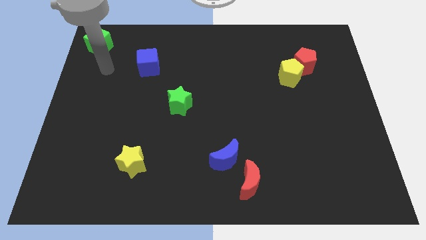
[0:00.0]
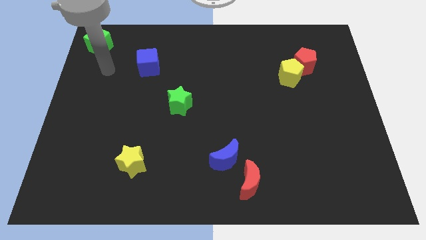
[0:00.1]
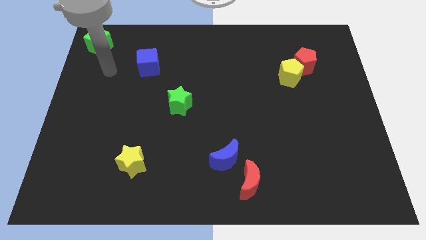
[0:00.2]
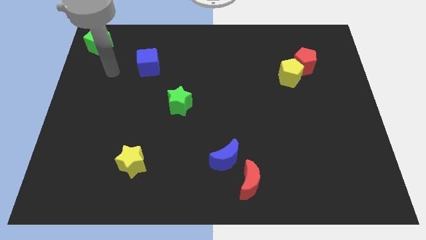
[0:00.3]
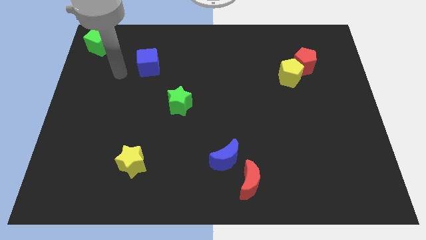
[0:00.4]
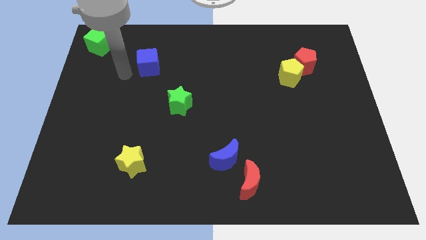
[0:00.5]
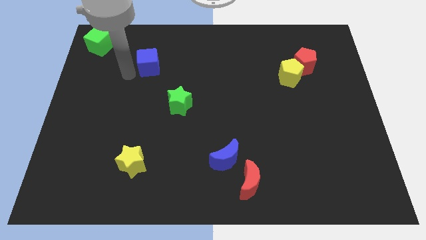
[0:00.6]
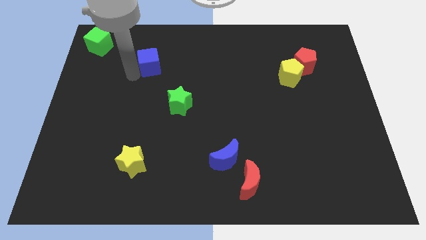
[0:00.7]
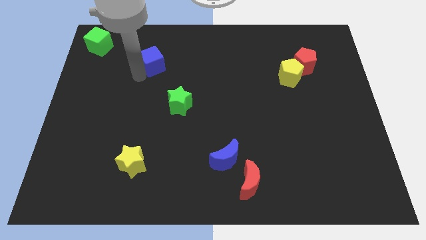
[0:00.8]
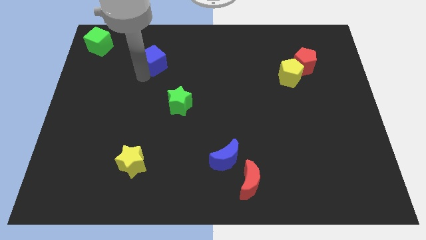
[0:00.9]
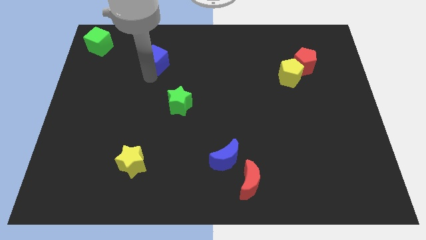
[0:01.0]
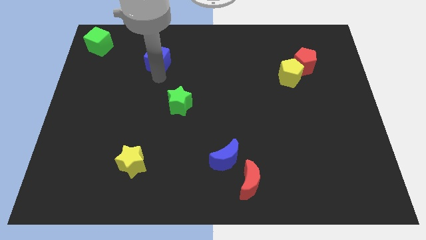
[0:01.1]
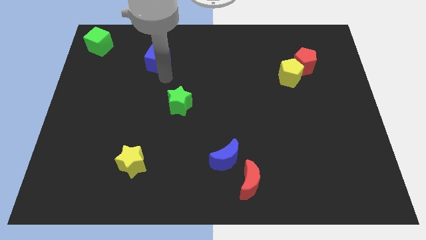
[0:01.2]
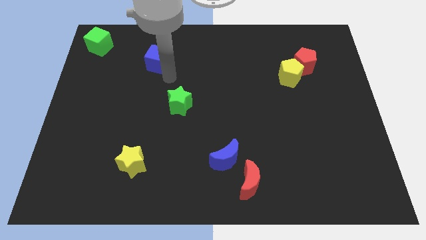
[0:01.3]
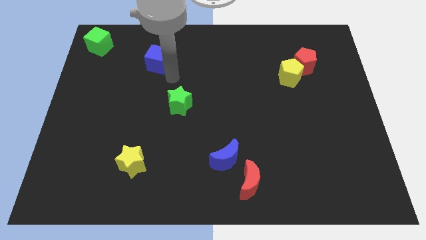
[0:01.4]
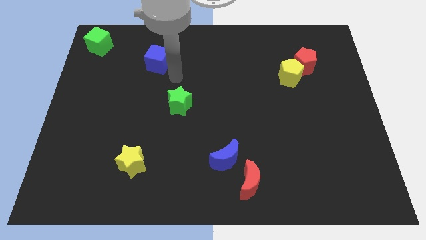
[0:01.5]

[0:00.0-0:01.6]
slightly tap the blue cube

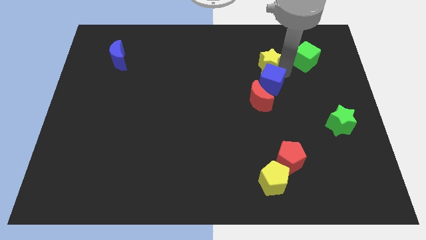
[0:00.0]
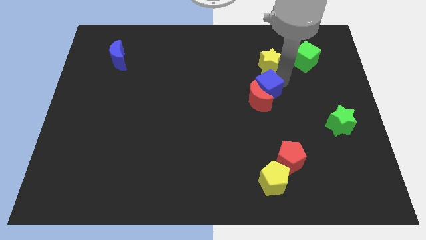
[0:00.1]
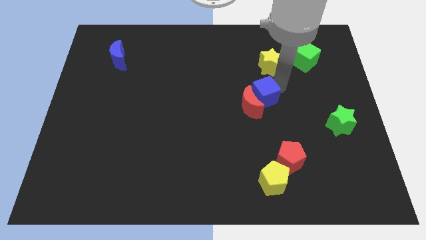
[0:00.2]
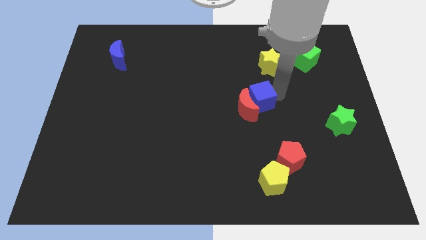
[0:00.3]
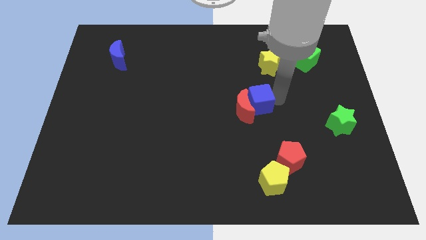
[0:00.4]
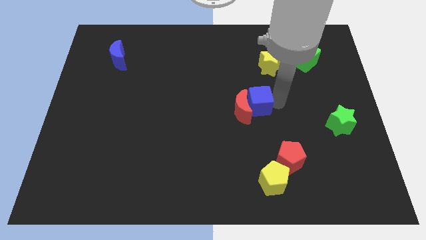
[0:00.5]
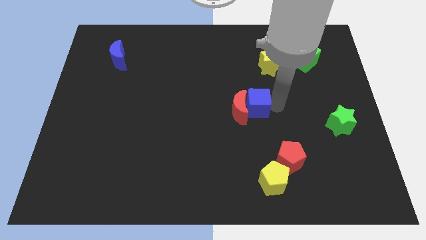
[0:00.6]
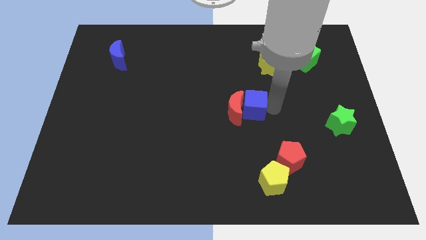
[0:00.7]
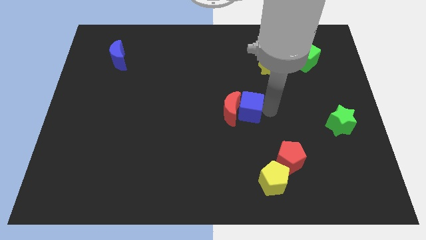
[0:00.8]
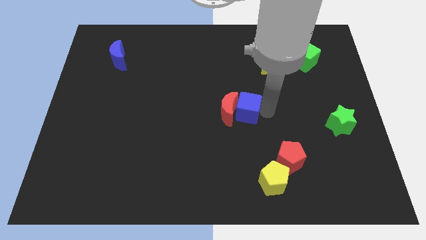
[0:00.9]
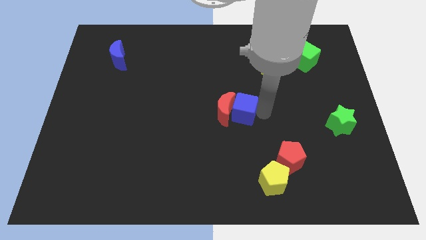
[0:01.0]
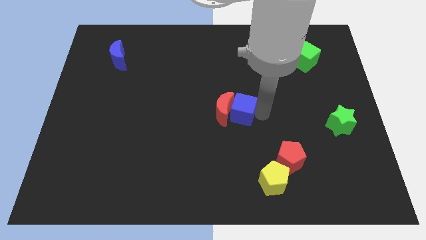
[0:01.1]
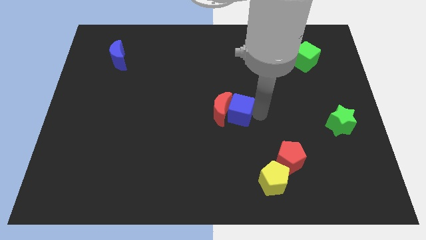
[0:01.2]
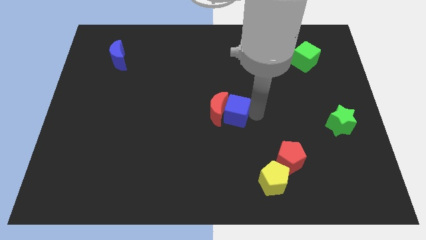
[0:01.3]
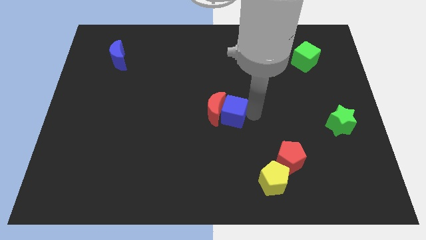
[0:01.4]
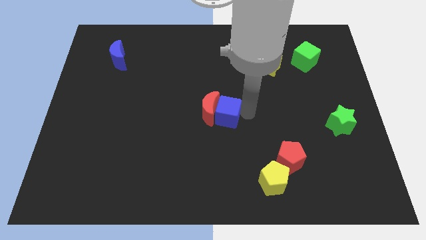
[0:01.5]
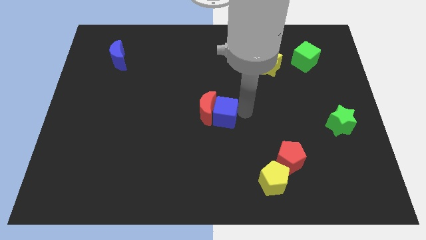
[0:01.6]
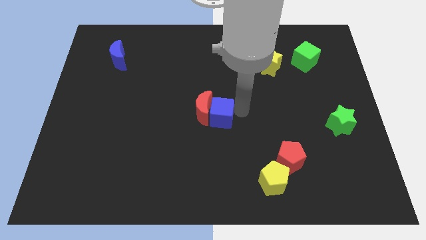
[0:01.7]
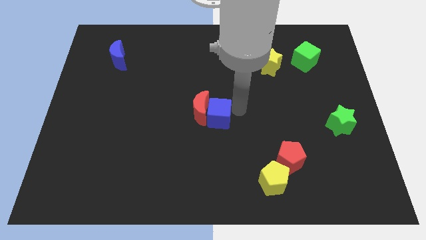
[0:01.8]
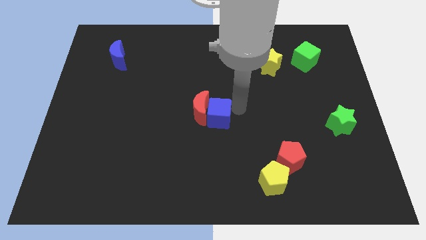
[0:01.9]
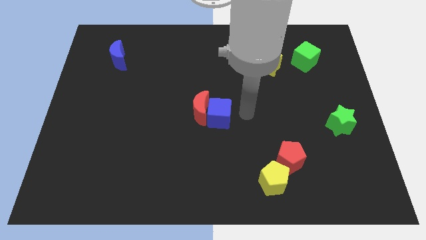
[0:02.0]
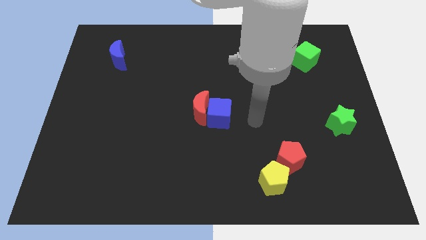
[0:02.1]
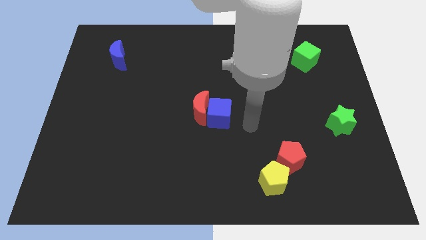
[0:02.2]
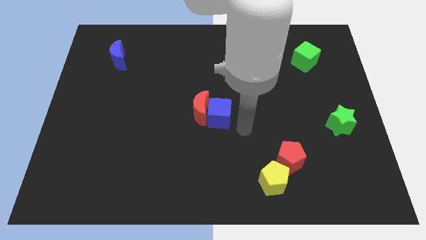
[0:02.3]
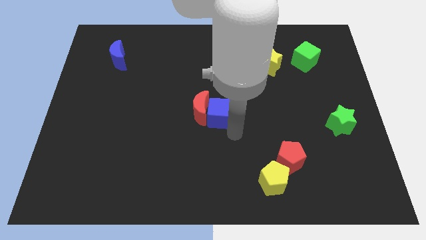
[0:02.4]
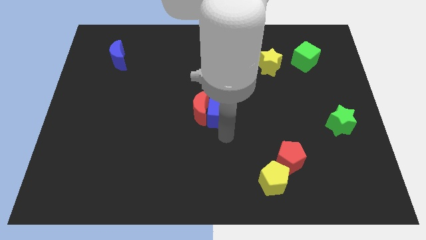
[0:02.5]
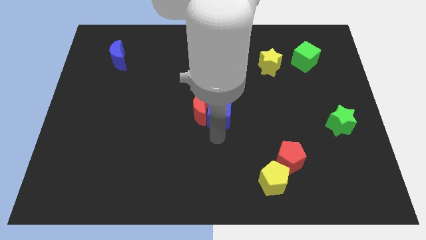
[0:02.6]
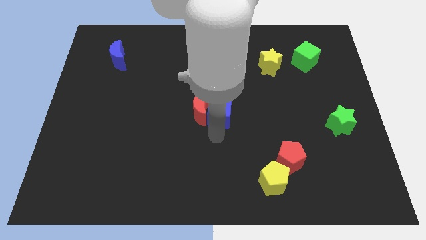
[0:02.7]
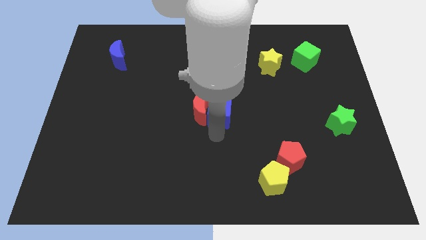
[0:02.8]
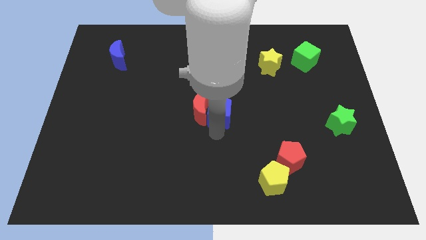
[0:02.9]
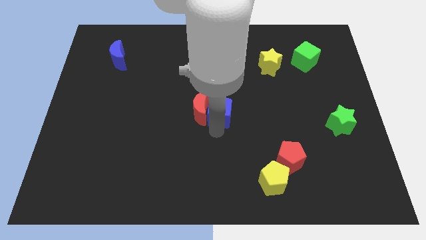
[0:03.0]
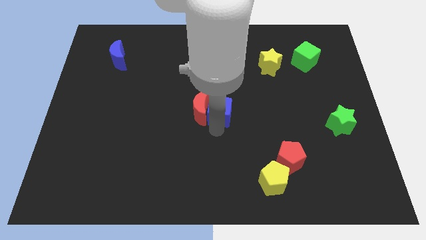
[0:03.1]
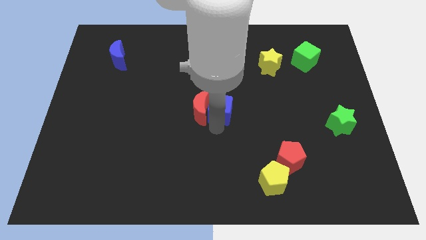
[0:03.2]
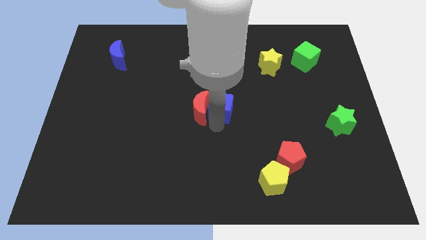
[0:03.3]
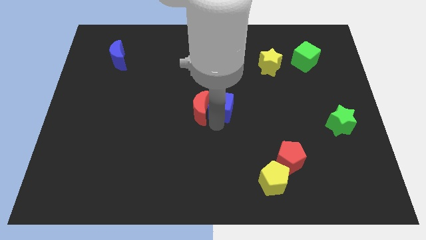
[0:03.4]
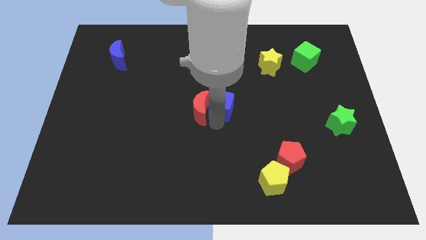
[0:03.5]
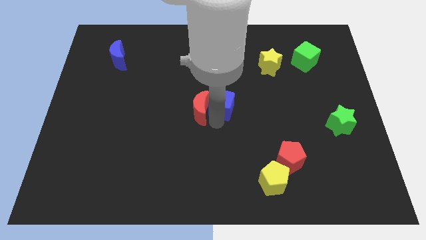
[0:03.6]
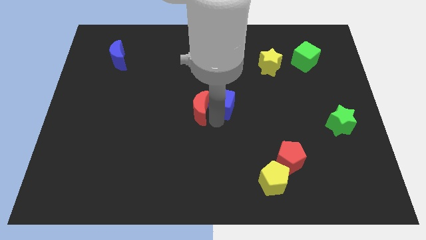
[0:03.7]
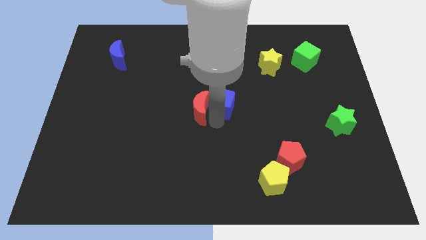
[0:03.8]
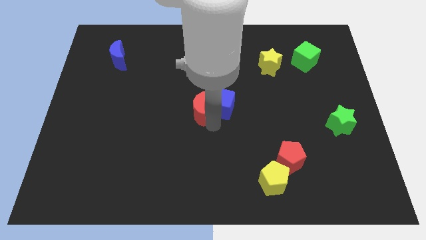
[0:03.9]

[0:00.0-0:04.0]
push the blue cube and the red crescent together to the center of the board

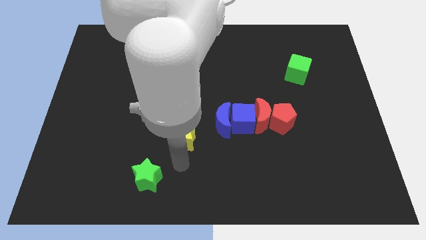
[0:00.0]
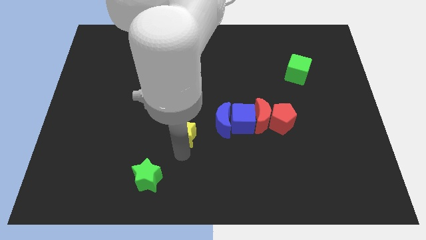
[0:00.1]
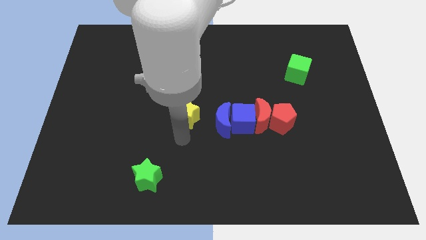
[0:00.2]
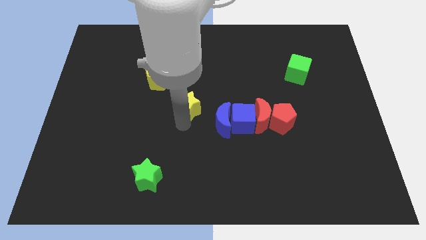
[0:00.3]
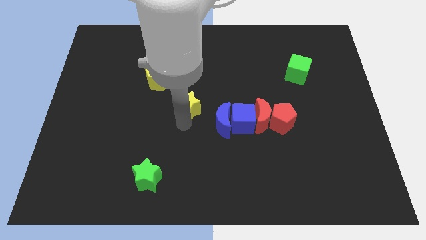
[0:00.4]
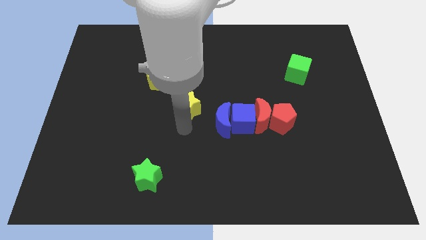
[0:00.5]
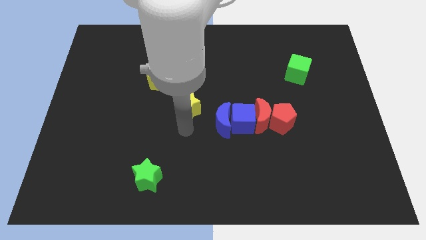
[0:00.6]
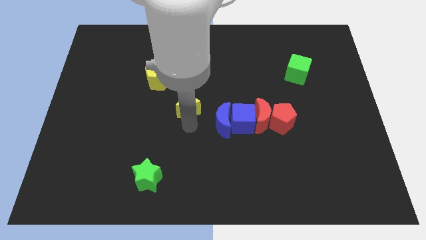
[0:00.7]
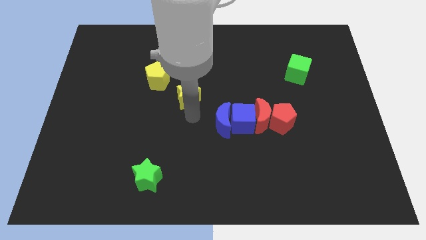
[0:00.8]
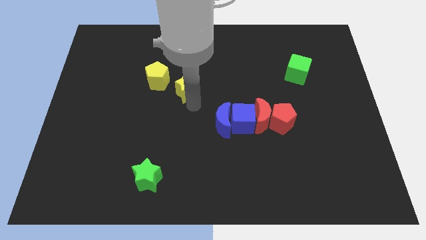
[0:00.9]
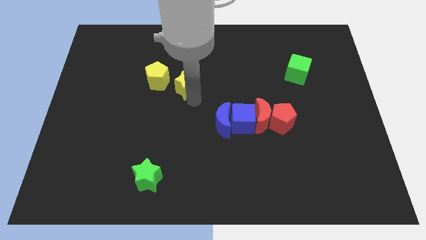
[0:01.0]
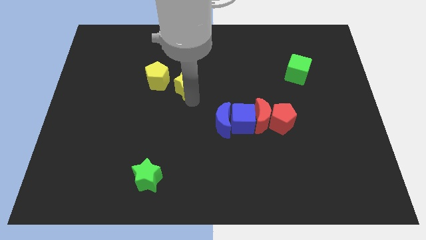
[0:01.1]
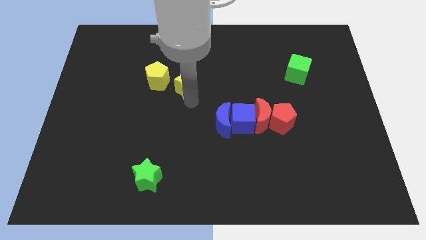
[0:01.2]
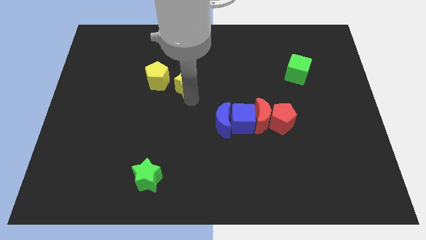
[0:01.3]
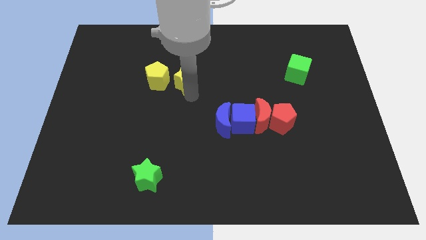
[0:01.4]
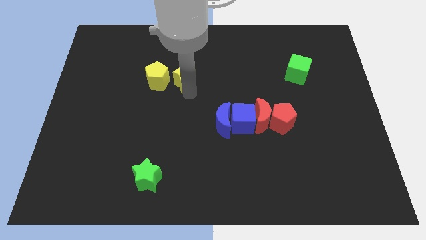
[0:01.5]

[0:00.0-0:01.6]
move the yellow star parallel right side of the yellow pentagon

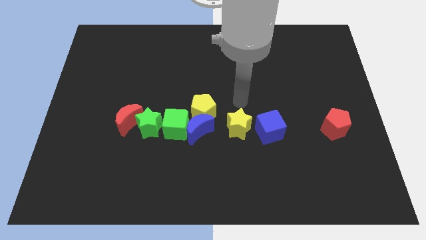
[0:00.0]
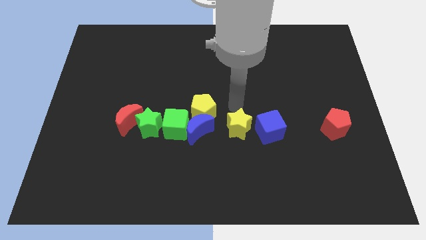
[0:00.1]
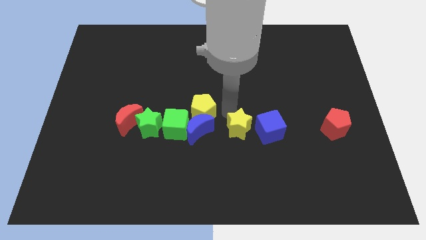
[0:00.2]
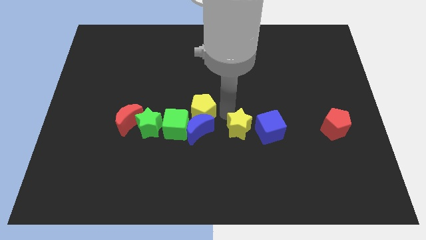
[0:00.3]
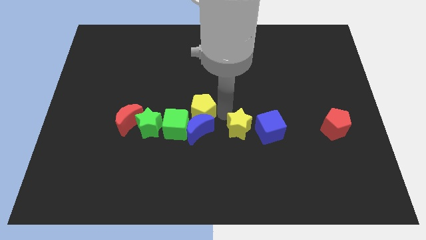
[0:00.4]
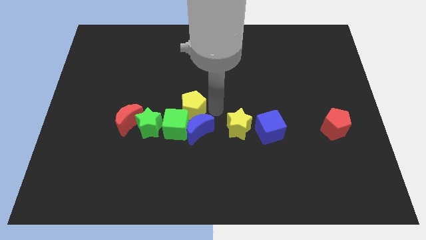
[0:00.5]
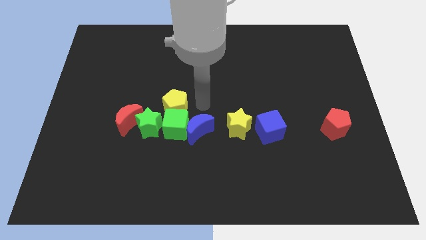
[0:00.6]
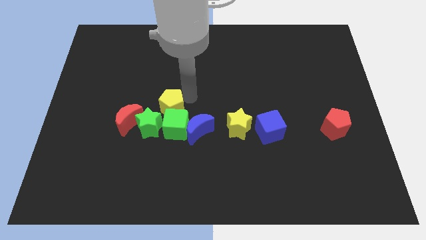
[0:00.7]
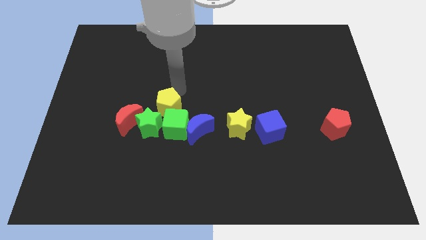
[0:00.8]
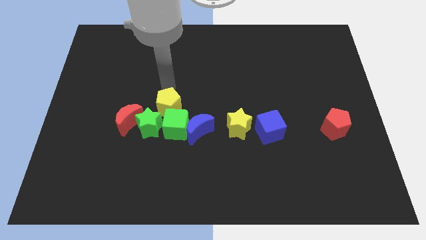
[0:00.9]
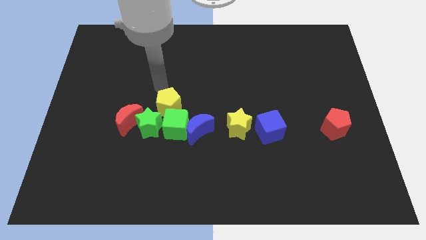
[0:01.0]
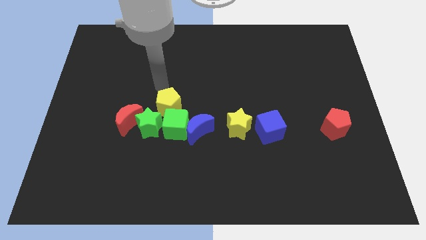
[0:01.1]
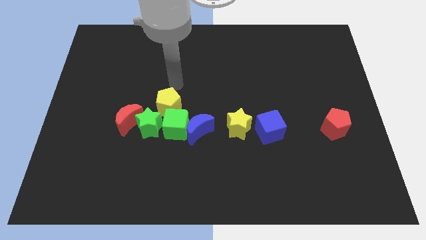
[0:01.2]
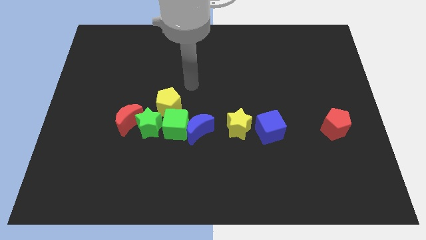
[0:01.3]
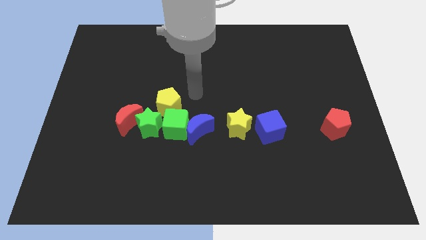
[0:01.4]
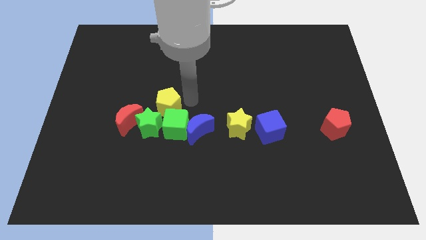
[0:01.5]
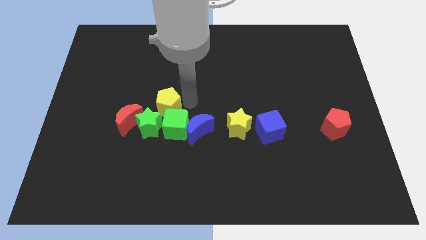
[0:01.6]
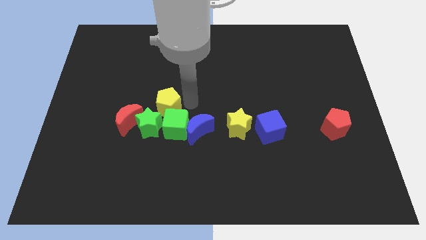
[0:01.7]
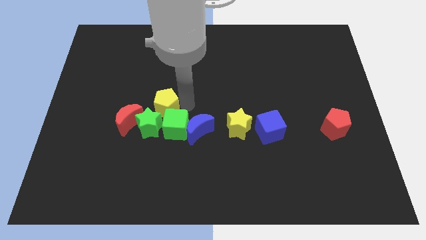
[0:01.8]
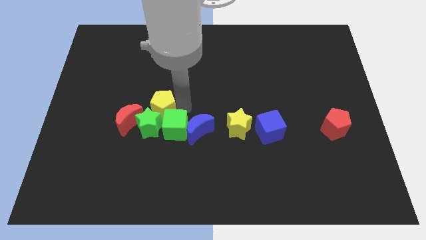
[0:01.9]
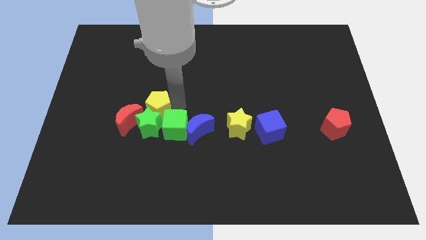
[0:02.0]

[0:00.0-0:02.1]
push the yellow pentagon to the top of the green star
